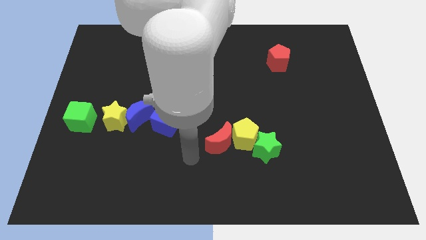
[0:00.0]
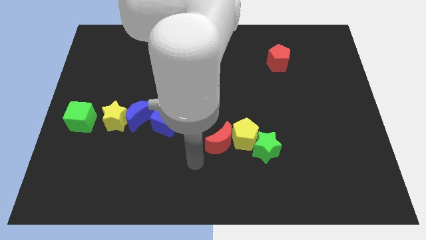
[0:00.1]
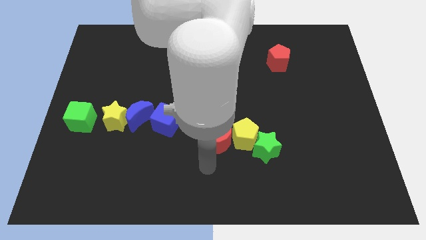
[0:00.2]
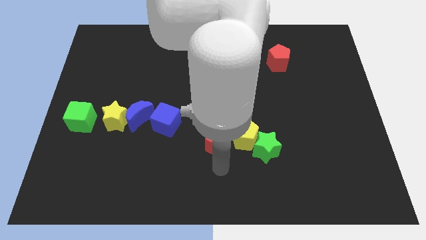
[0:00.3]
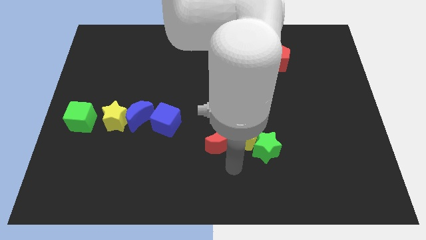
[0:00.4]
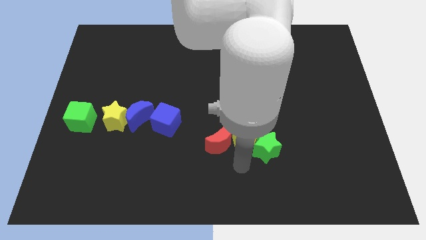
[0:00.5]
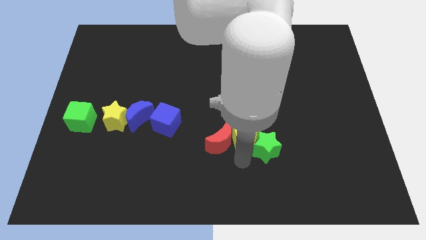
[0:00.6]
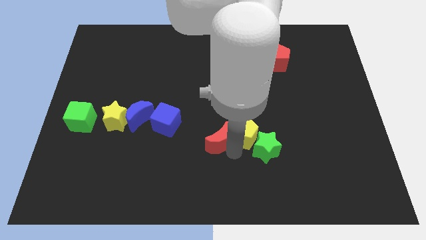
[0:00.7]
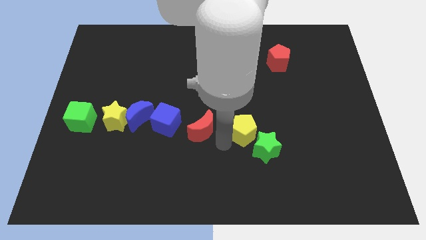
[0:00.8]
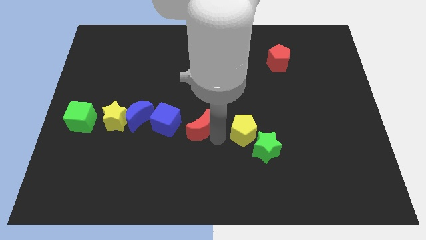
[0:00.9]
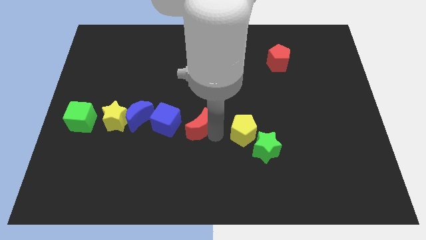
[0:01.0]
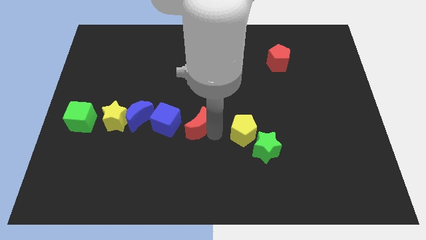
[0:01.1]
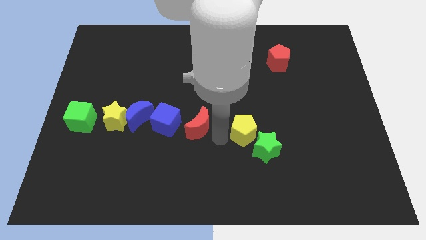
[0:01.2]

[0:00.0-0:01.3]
push red crescent to the right side blue cube

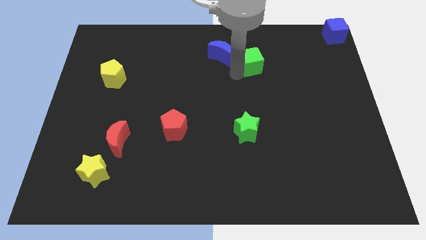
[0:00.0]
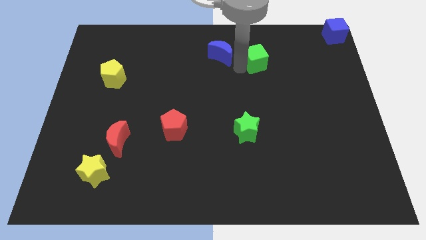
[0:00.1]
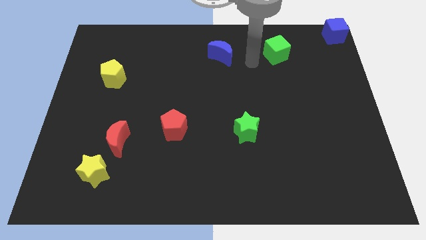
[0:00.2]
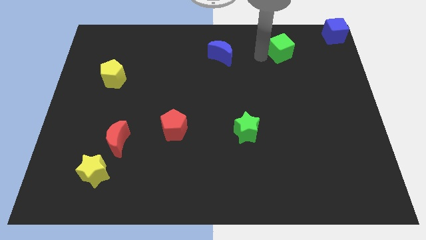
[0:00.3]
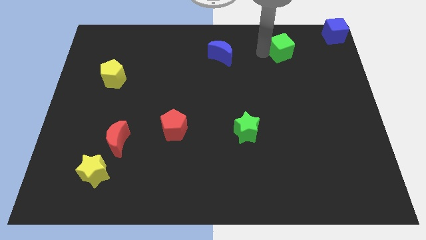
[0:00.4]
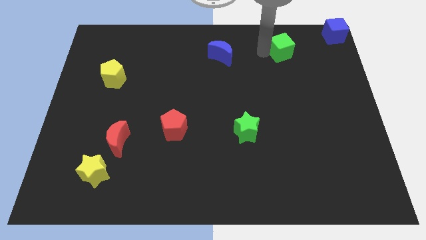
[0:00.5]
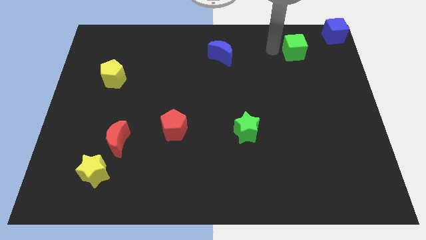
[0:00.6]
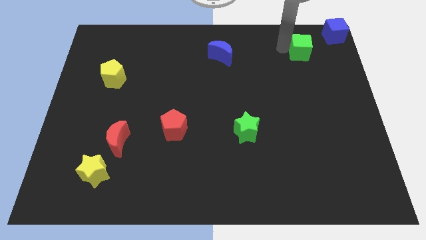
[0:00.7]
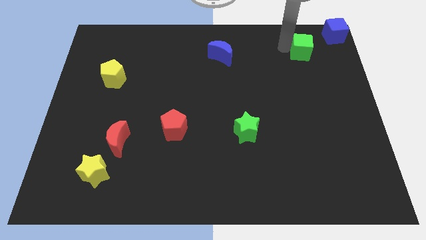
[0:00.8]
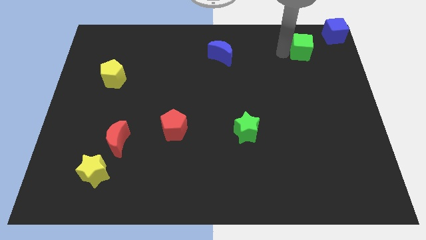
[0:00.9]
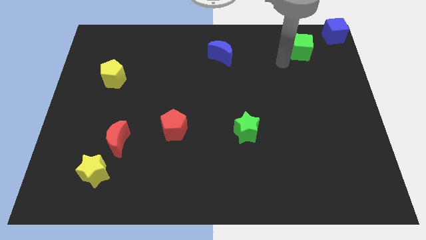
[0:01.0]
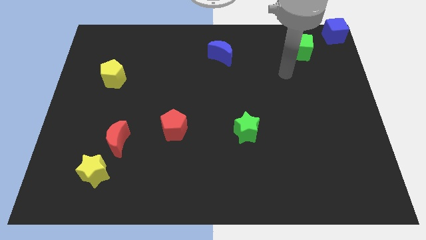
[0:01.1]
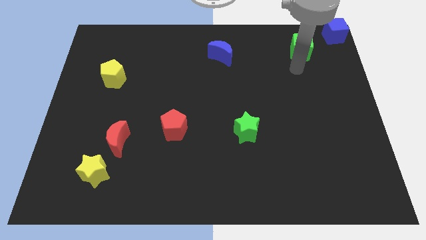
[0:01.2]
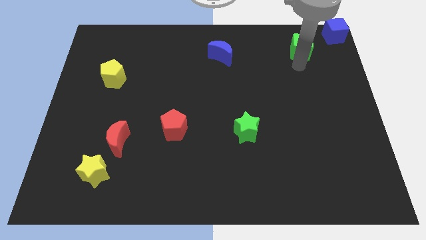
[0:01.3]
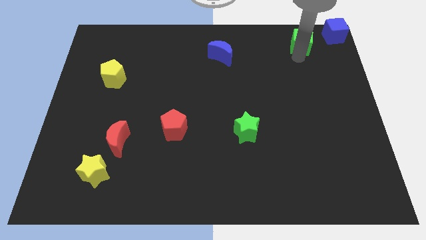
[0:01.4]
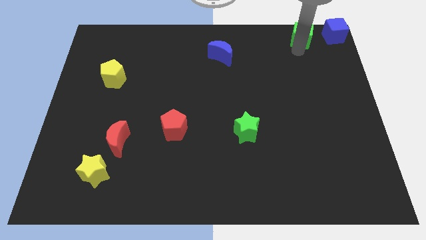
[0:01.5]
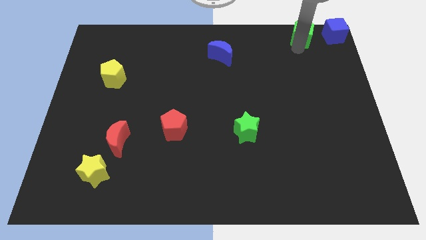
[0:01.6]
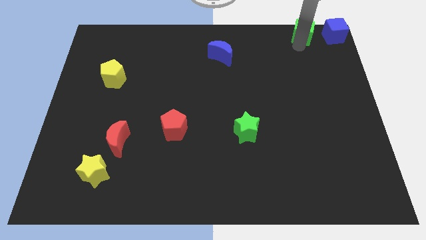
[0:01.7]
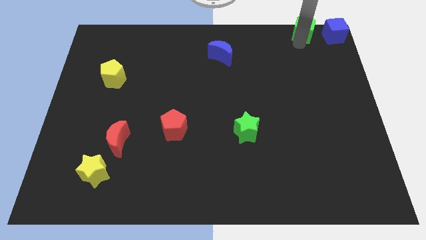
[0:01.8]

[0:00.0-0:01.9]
move the green cube left to the blue cube

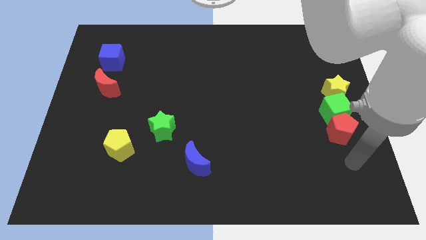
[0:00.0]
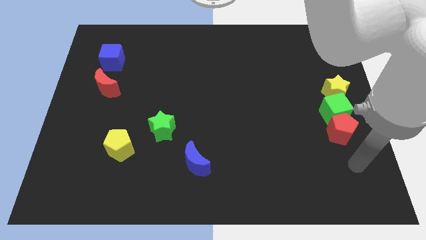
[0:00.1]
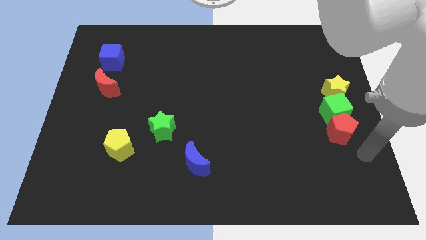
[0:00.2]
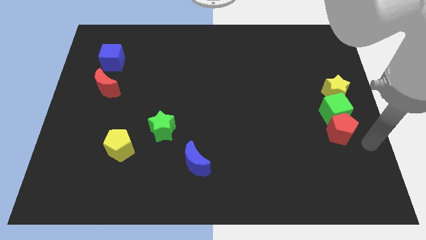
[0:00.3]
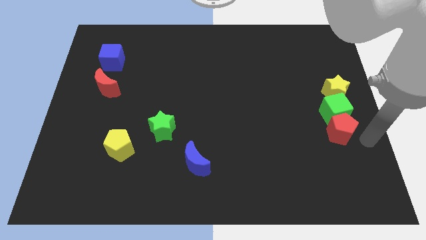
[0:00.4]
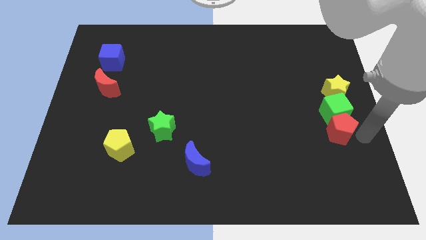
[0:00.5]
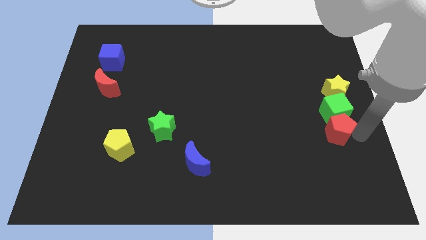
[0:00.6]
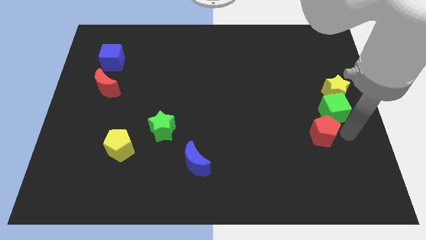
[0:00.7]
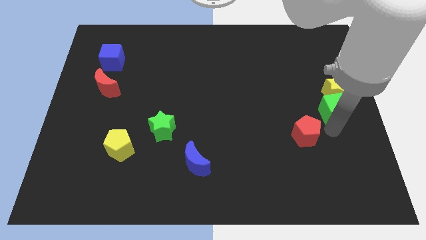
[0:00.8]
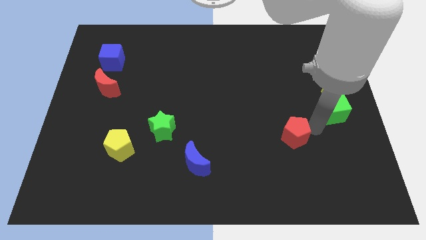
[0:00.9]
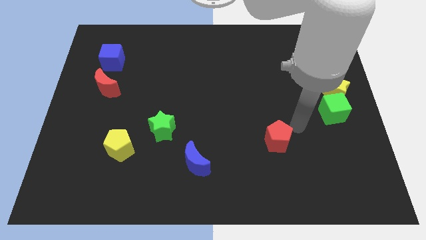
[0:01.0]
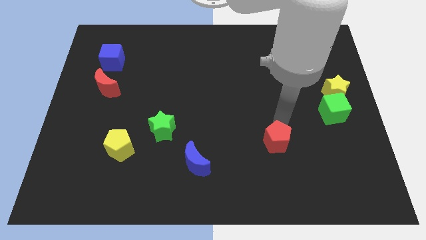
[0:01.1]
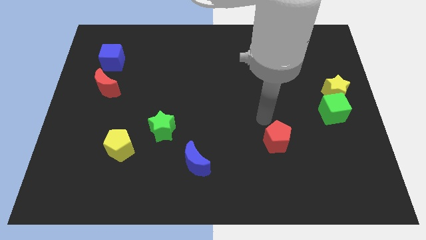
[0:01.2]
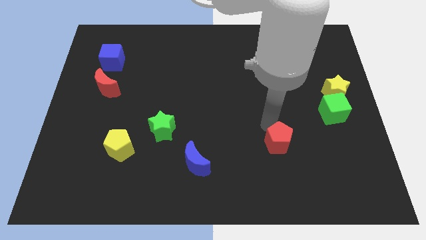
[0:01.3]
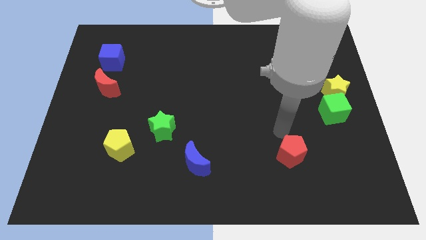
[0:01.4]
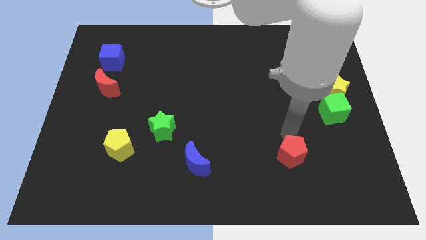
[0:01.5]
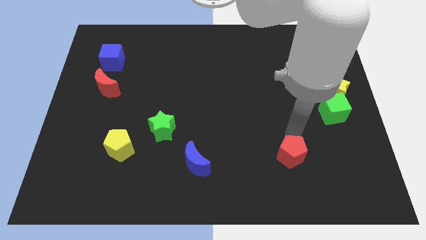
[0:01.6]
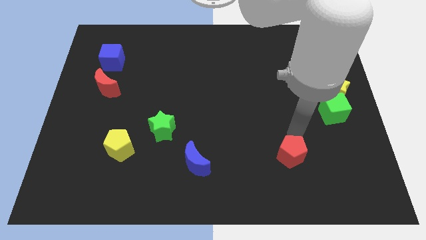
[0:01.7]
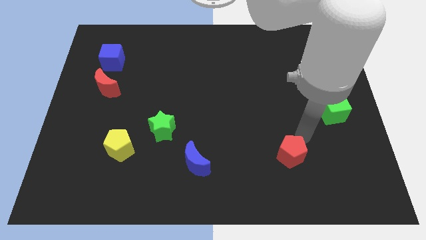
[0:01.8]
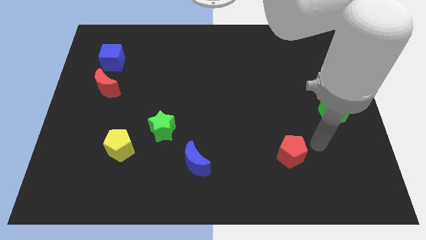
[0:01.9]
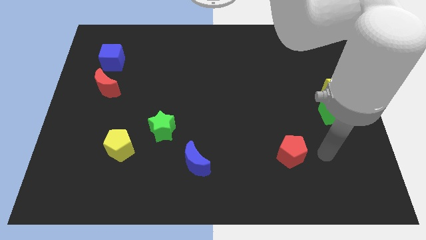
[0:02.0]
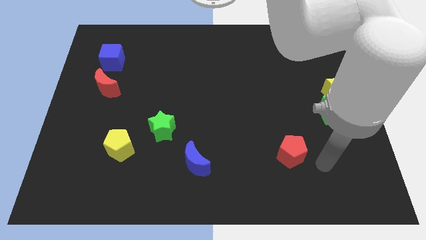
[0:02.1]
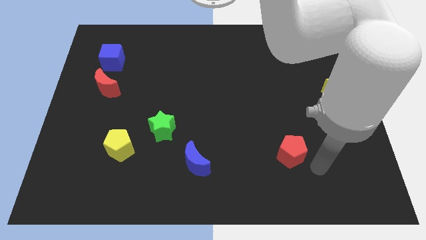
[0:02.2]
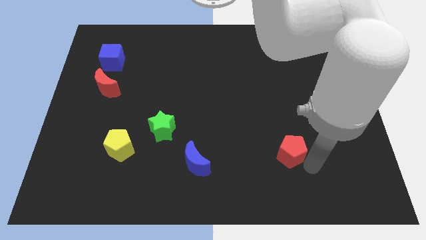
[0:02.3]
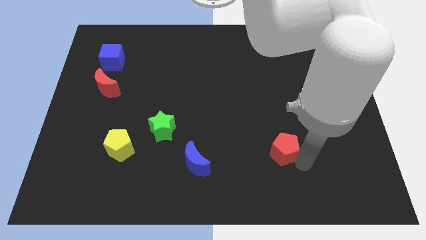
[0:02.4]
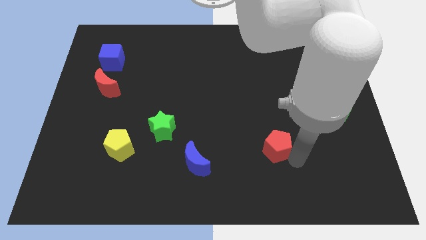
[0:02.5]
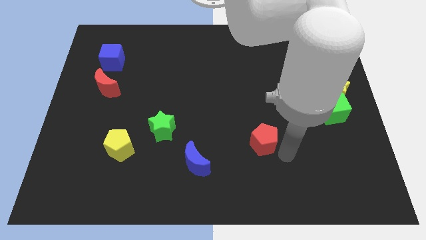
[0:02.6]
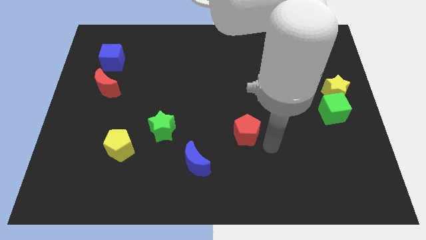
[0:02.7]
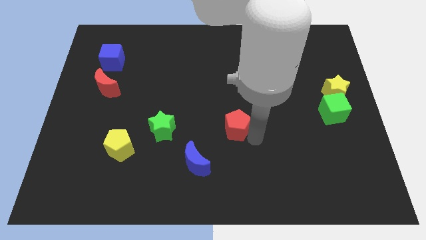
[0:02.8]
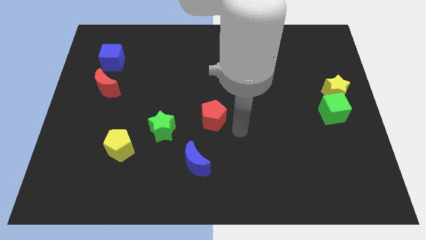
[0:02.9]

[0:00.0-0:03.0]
place the red pentagon in between the green star and green cube

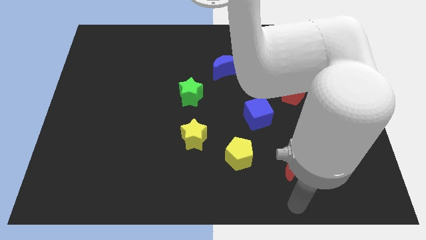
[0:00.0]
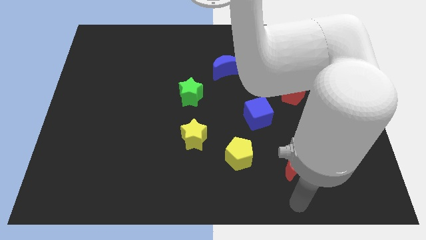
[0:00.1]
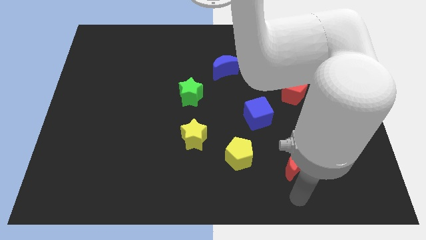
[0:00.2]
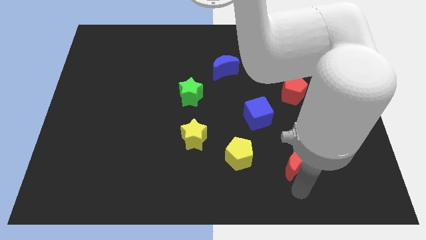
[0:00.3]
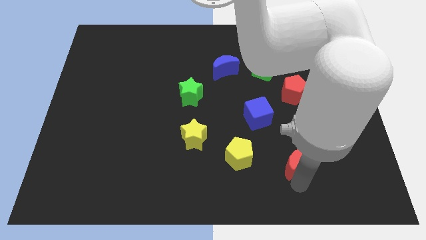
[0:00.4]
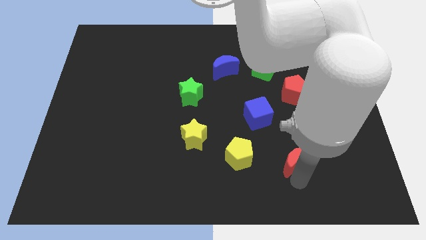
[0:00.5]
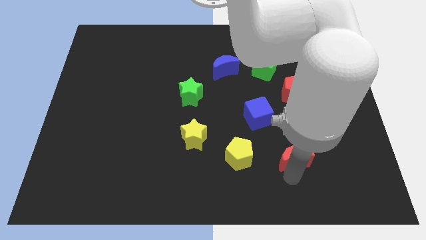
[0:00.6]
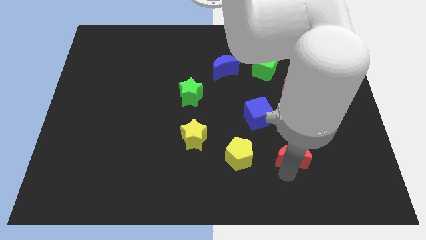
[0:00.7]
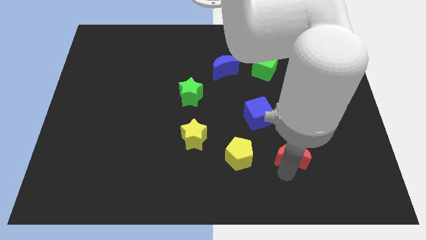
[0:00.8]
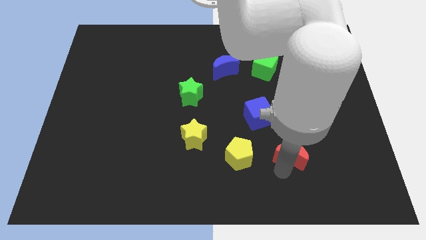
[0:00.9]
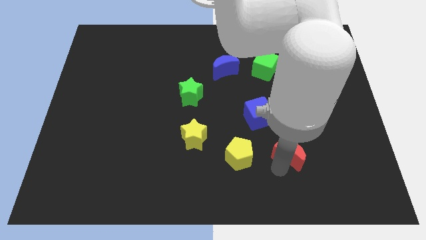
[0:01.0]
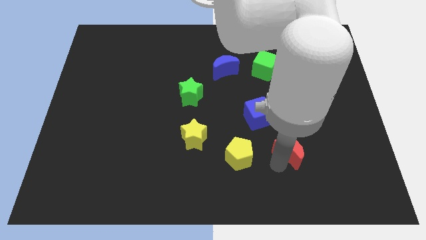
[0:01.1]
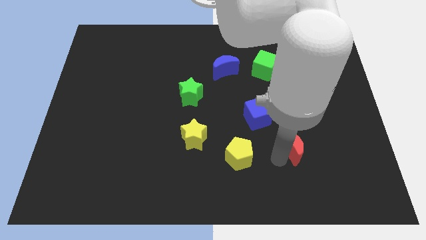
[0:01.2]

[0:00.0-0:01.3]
push the red crescent right of the yellow pentagon

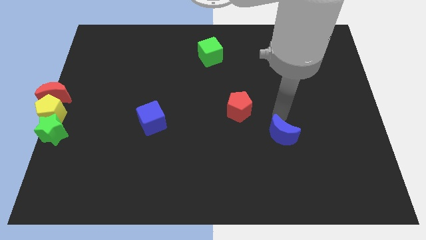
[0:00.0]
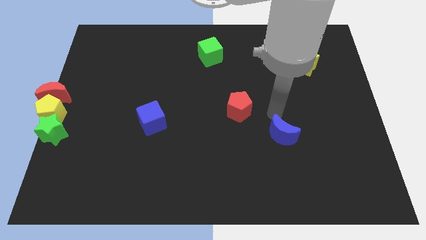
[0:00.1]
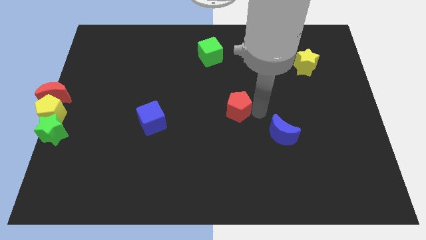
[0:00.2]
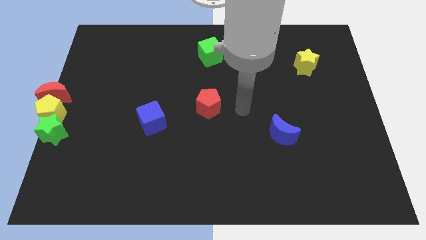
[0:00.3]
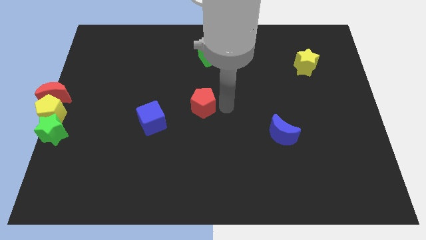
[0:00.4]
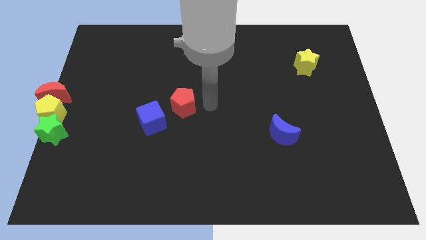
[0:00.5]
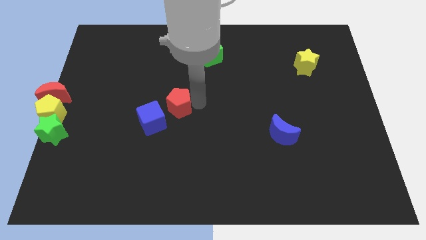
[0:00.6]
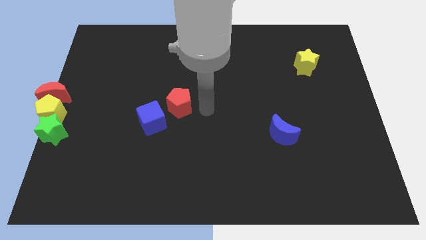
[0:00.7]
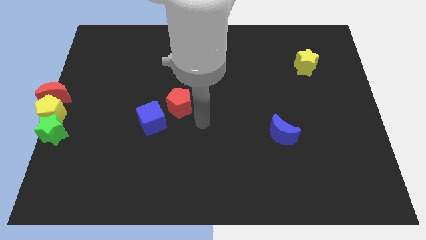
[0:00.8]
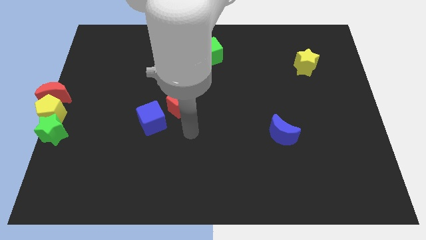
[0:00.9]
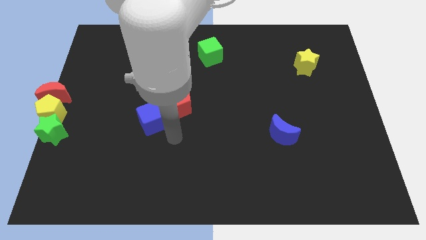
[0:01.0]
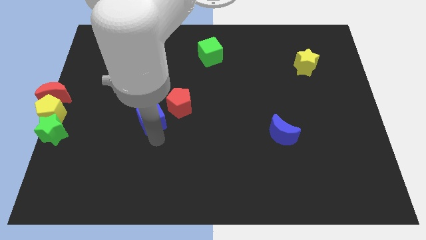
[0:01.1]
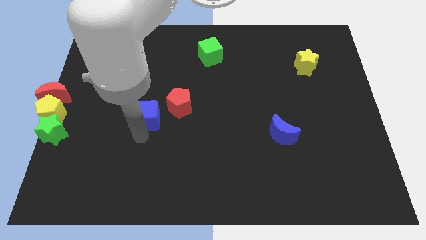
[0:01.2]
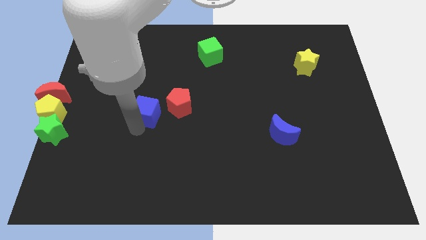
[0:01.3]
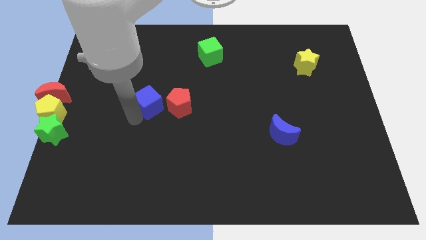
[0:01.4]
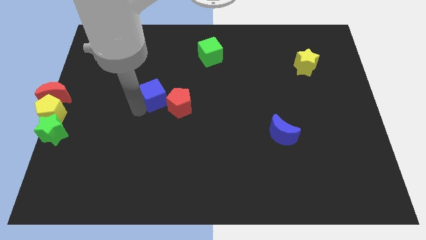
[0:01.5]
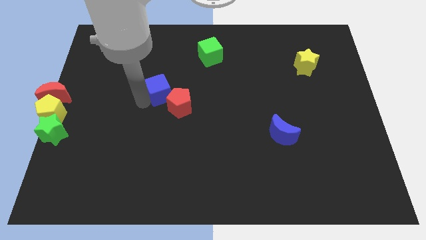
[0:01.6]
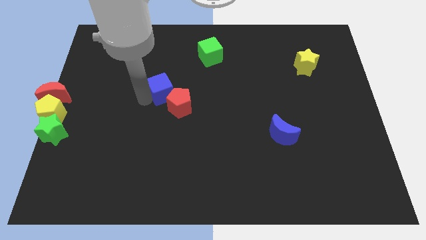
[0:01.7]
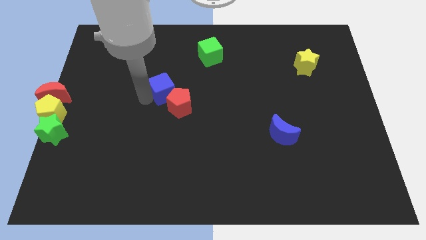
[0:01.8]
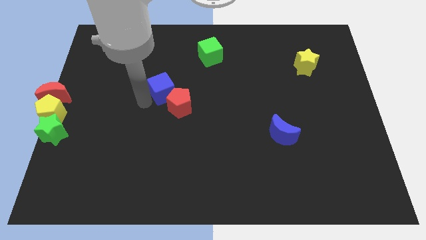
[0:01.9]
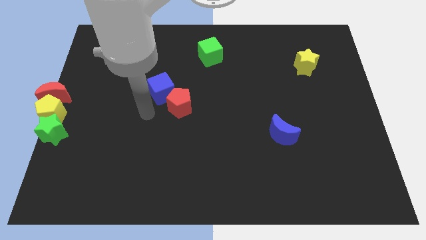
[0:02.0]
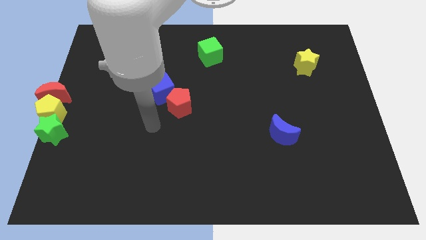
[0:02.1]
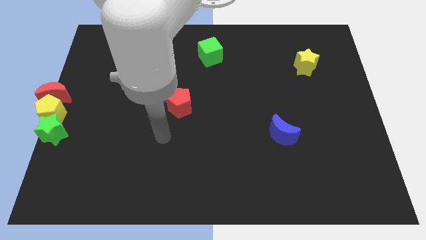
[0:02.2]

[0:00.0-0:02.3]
place the blue block to the top left side of the red pentagon
